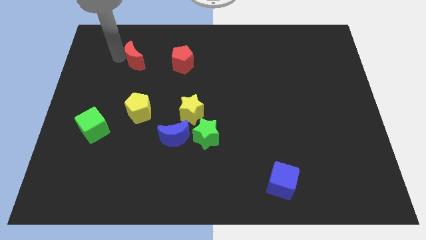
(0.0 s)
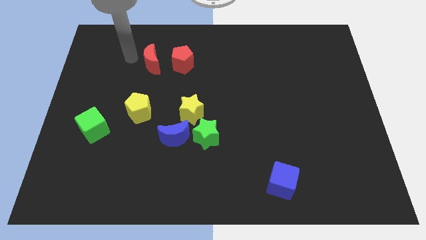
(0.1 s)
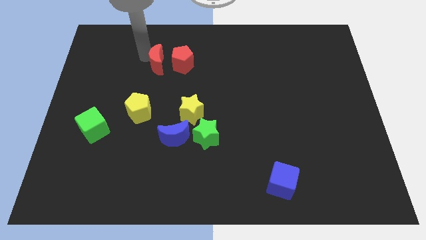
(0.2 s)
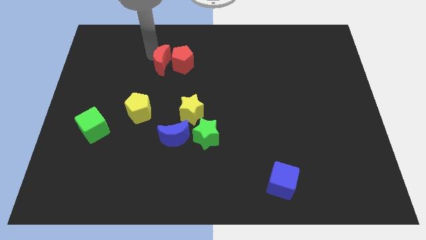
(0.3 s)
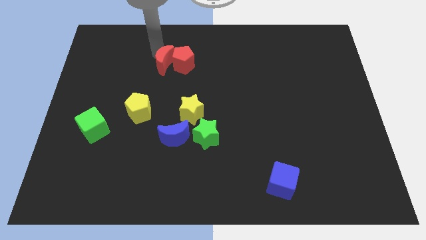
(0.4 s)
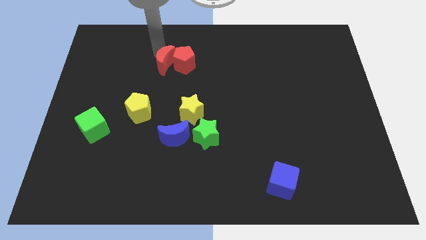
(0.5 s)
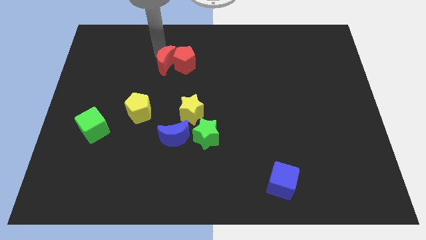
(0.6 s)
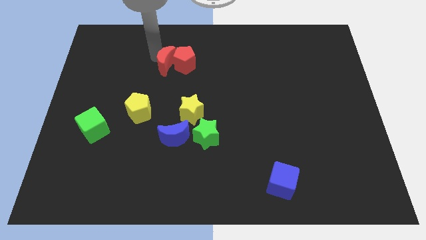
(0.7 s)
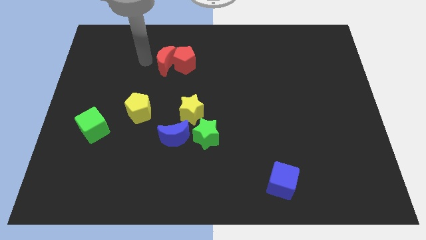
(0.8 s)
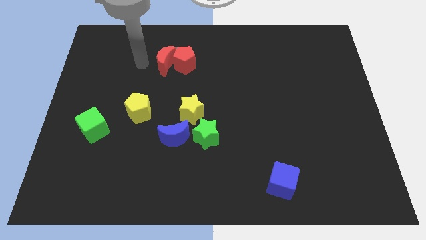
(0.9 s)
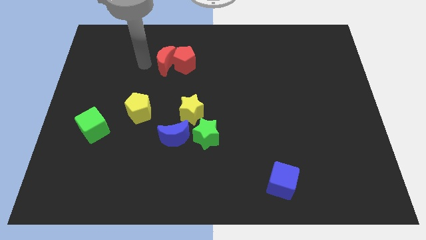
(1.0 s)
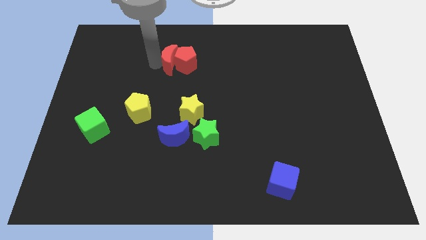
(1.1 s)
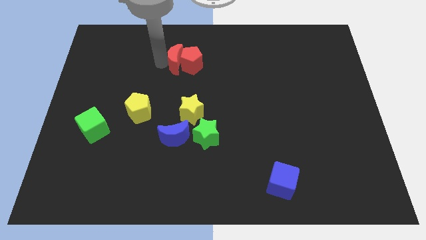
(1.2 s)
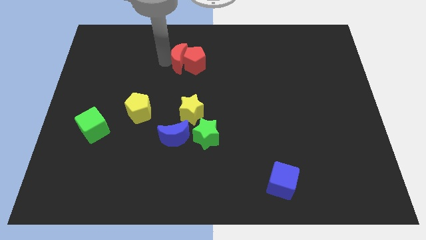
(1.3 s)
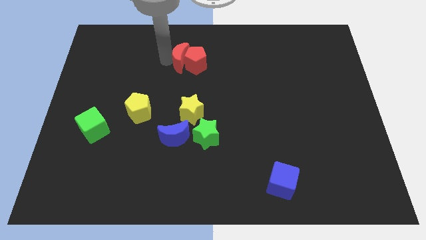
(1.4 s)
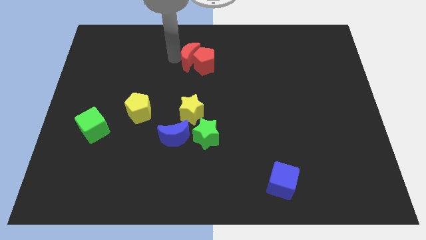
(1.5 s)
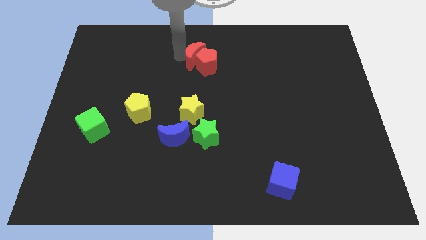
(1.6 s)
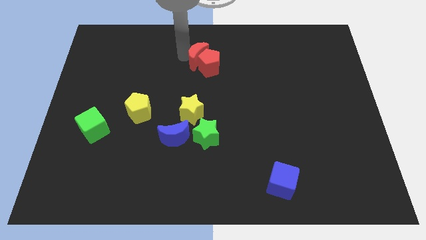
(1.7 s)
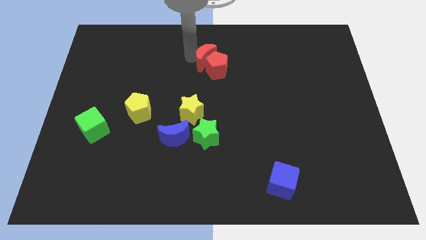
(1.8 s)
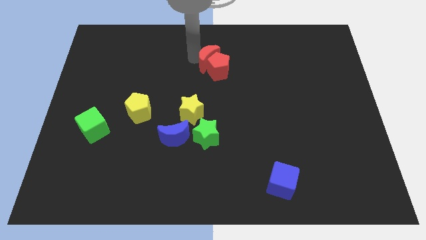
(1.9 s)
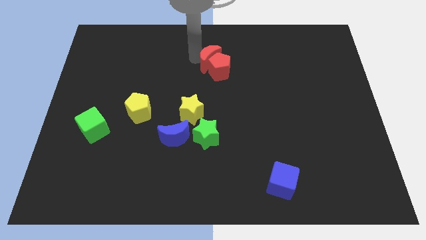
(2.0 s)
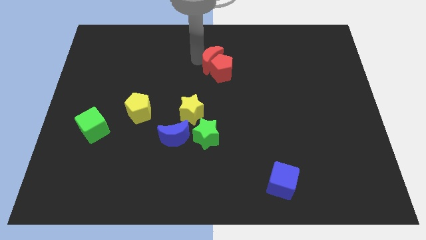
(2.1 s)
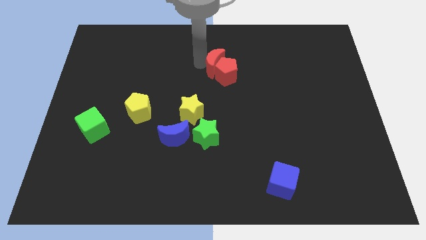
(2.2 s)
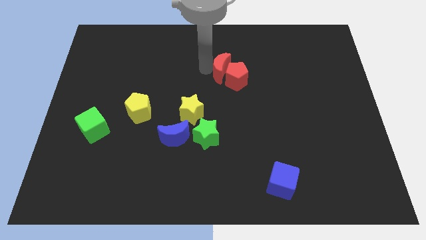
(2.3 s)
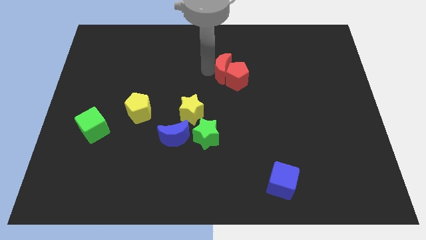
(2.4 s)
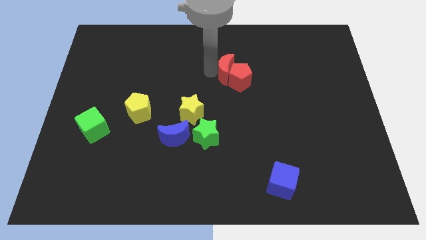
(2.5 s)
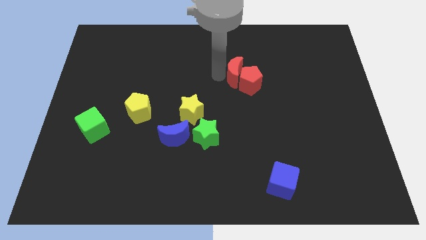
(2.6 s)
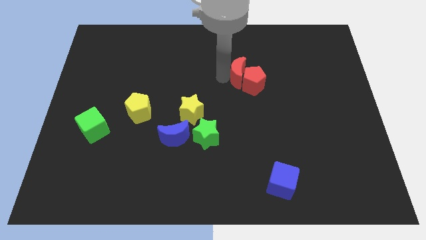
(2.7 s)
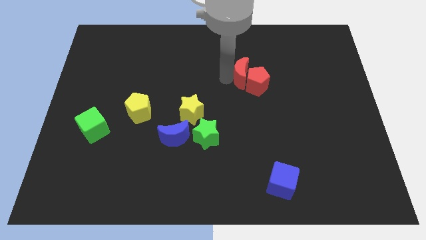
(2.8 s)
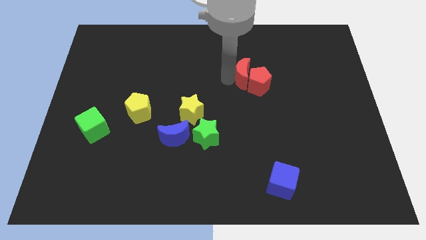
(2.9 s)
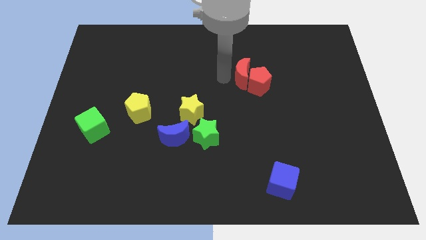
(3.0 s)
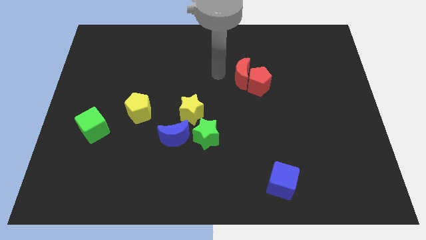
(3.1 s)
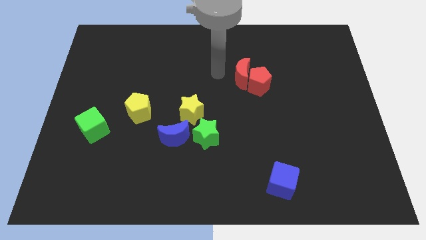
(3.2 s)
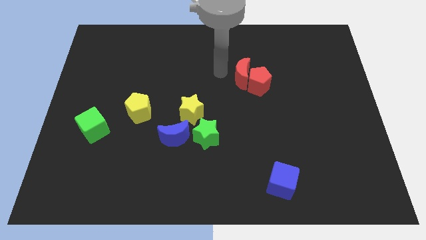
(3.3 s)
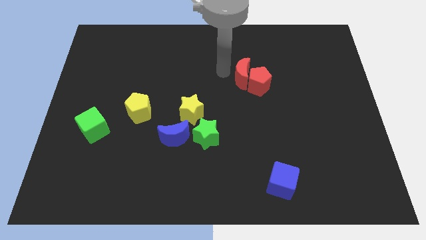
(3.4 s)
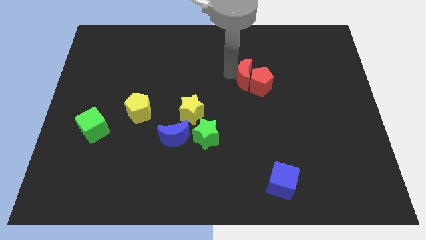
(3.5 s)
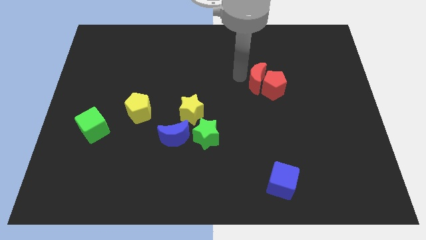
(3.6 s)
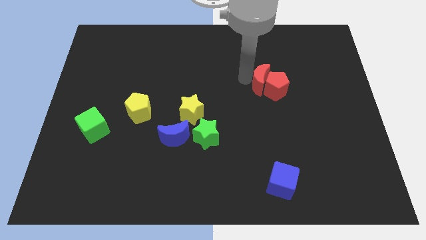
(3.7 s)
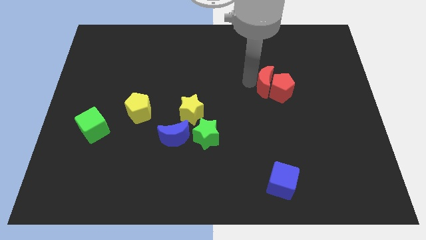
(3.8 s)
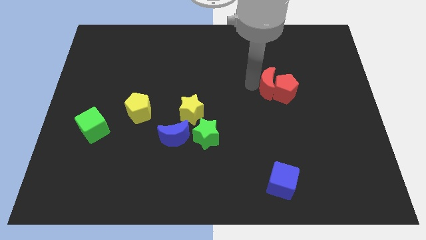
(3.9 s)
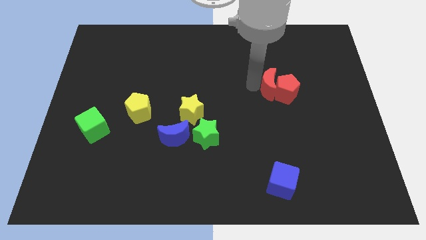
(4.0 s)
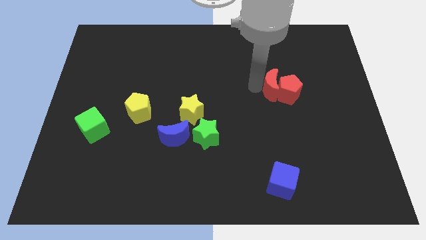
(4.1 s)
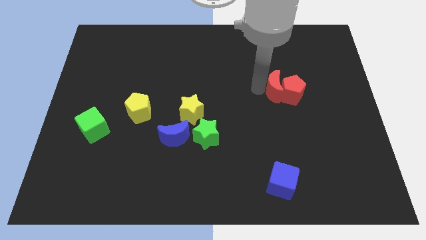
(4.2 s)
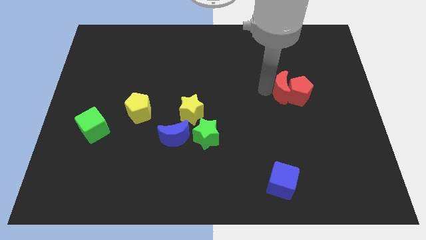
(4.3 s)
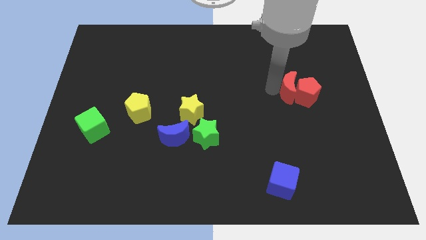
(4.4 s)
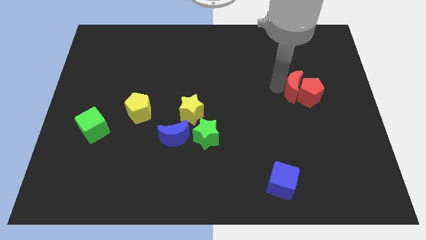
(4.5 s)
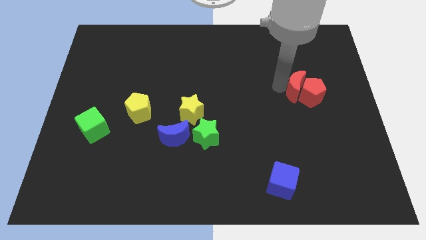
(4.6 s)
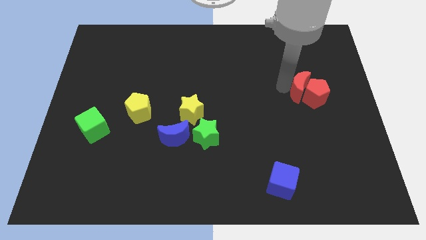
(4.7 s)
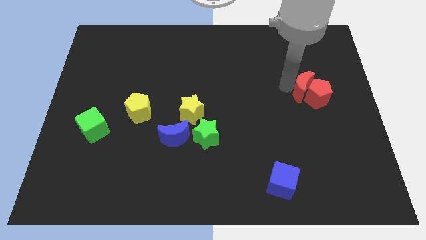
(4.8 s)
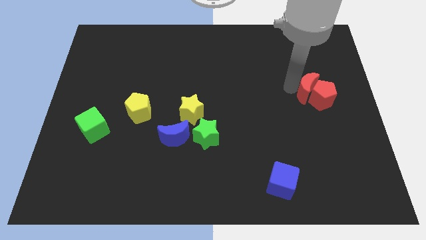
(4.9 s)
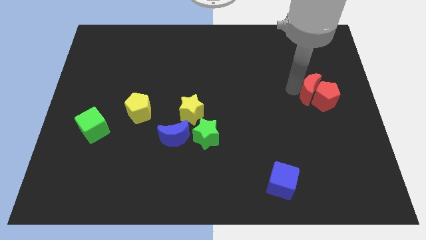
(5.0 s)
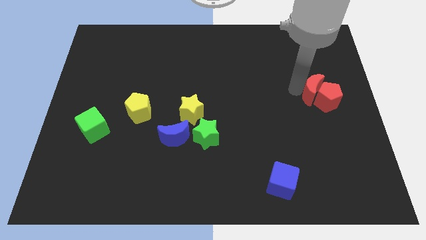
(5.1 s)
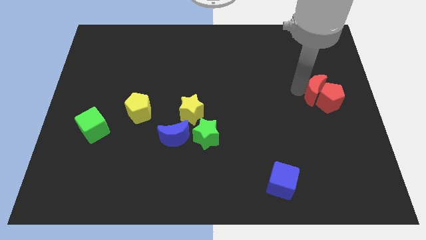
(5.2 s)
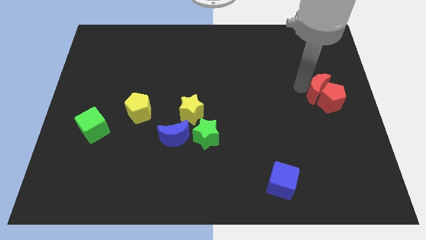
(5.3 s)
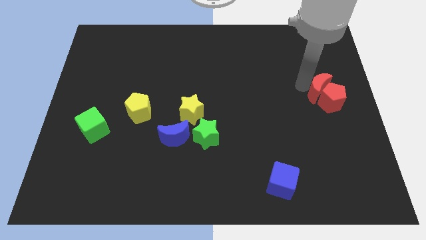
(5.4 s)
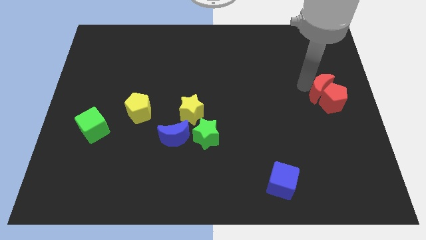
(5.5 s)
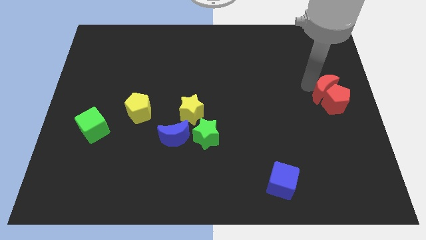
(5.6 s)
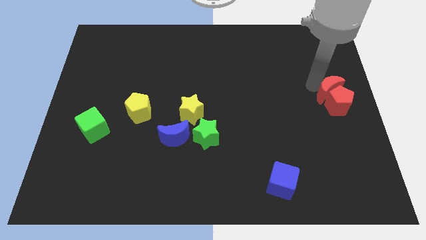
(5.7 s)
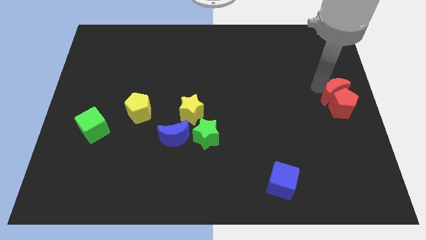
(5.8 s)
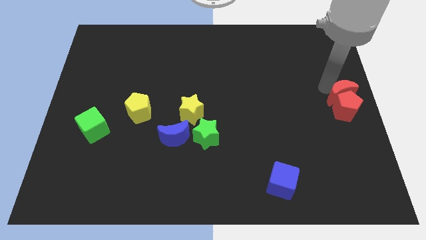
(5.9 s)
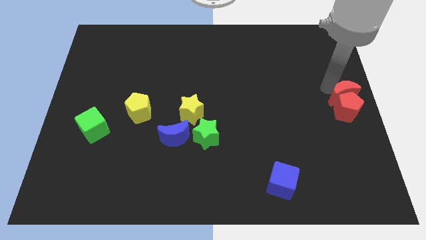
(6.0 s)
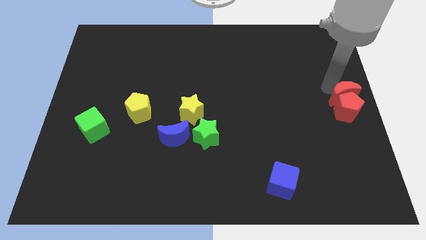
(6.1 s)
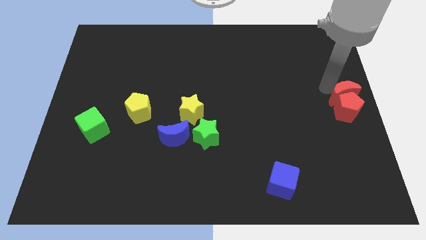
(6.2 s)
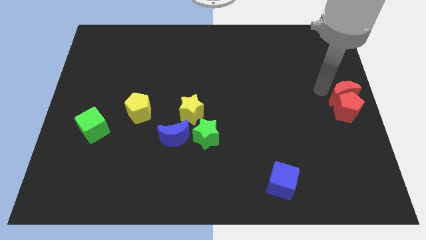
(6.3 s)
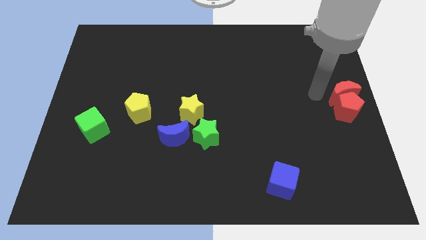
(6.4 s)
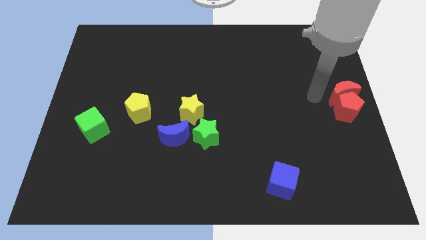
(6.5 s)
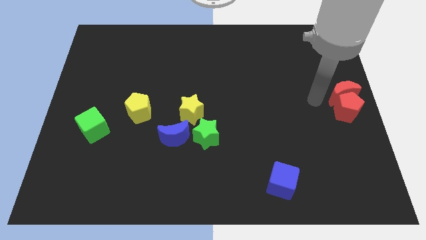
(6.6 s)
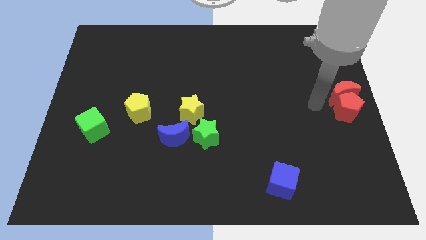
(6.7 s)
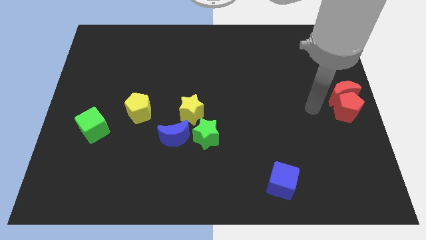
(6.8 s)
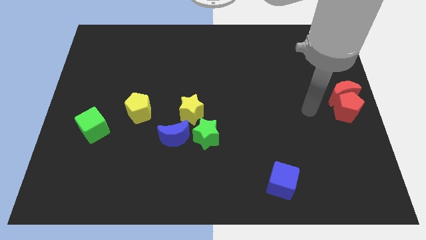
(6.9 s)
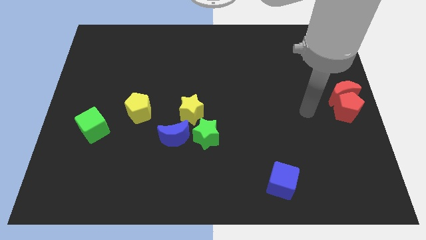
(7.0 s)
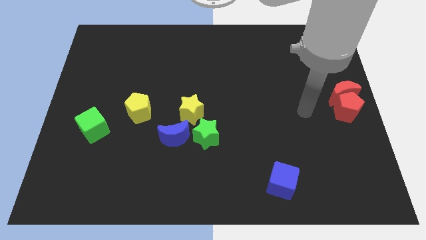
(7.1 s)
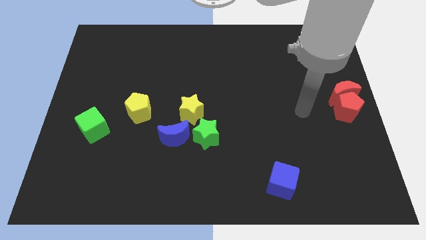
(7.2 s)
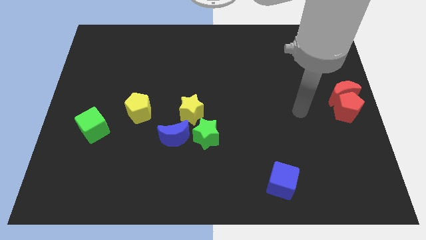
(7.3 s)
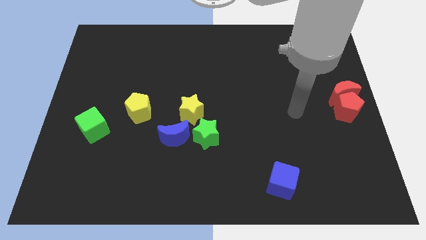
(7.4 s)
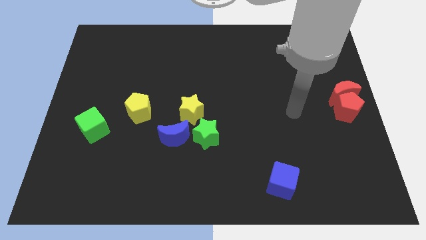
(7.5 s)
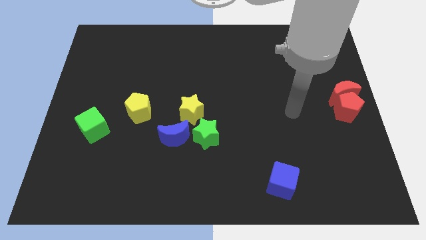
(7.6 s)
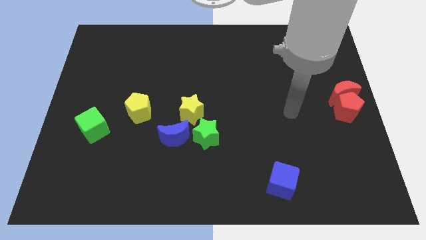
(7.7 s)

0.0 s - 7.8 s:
place the red blocks at the center right side of the board

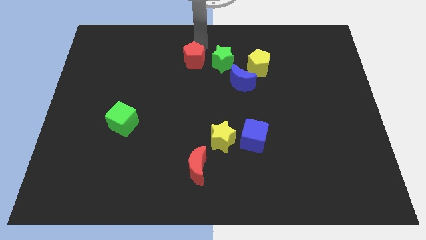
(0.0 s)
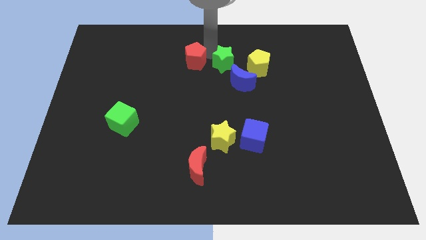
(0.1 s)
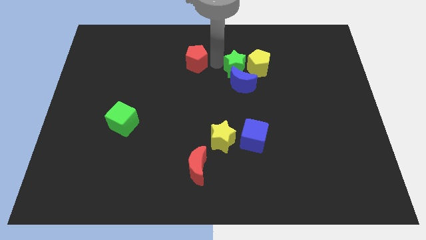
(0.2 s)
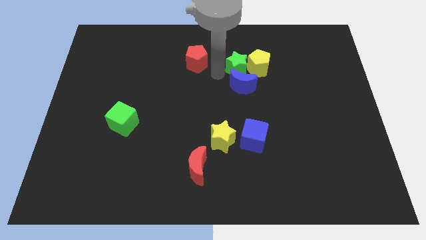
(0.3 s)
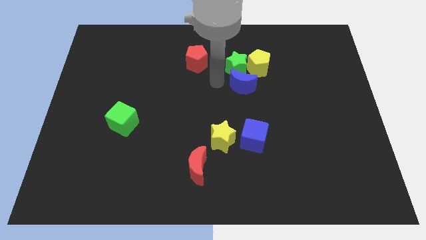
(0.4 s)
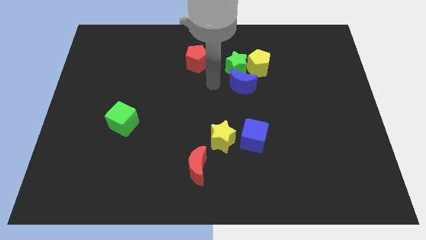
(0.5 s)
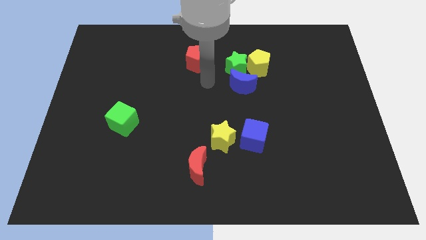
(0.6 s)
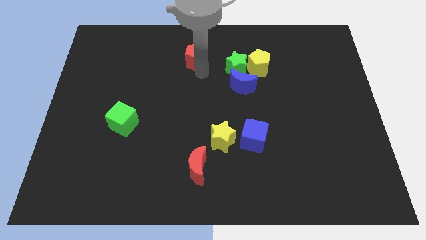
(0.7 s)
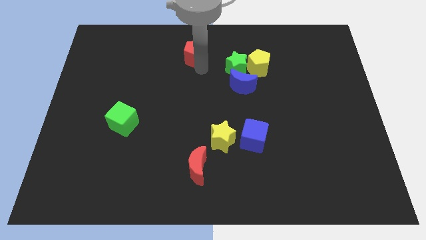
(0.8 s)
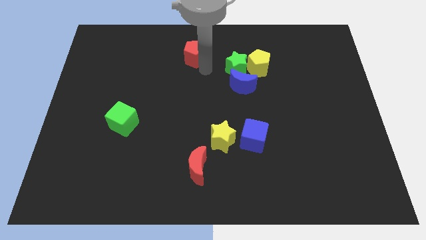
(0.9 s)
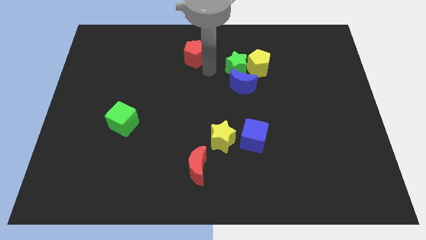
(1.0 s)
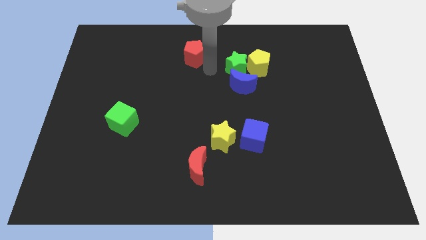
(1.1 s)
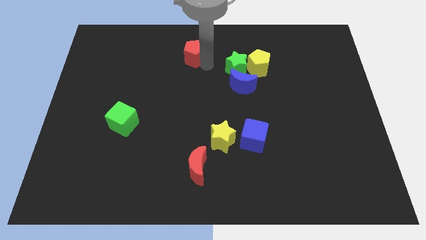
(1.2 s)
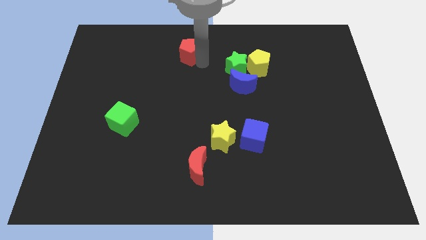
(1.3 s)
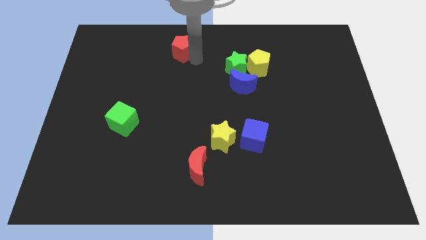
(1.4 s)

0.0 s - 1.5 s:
move the red pentagon away from the green star
